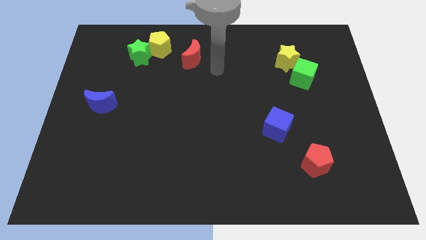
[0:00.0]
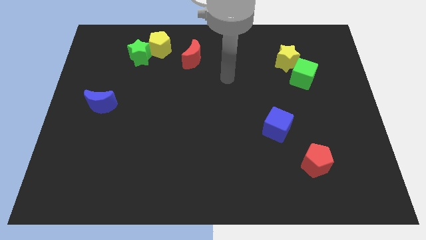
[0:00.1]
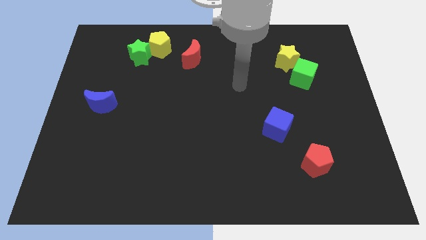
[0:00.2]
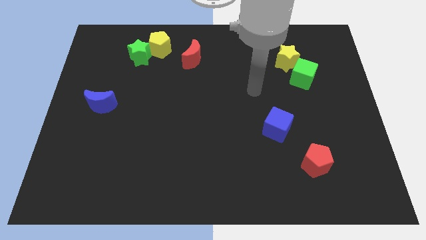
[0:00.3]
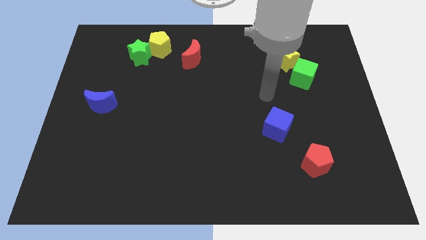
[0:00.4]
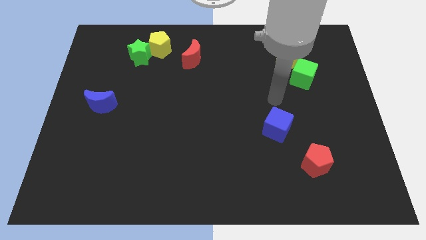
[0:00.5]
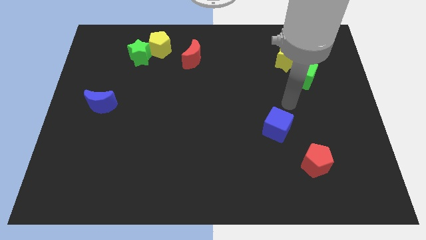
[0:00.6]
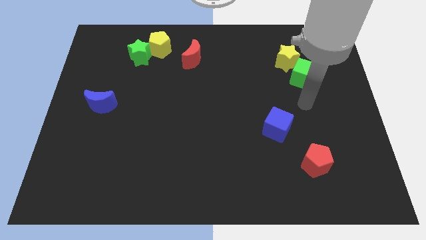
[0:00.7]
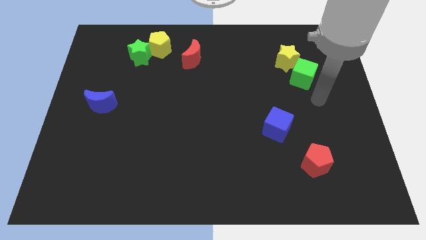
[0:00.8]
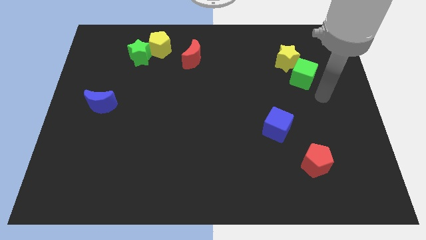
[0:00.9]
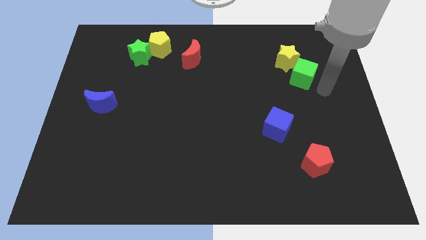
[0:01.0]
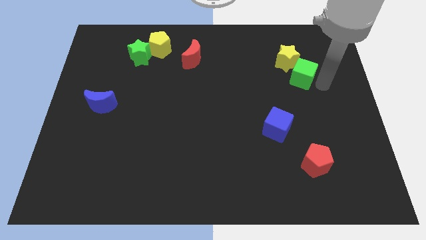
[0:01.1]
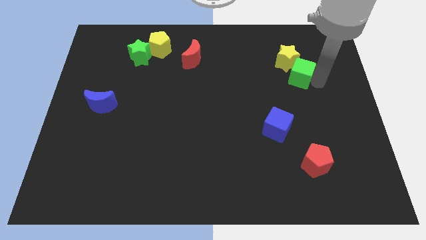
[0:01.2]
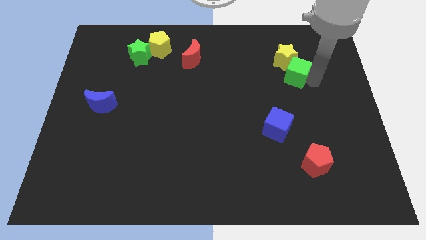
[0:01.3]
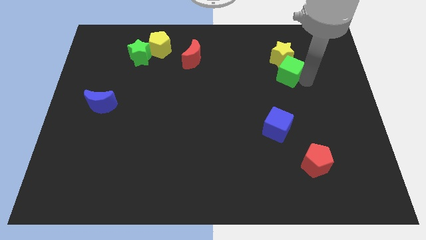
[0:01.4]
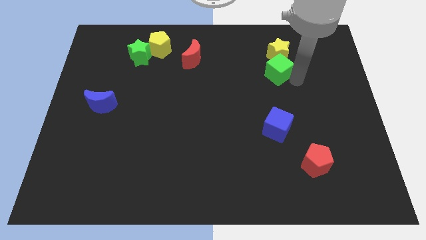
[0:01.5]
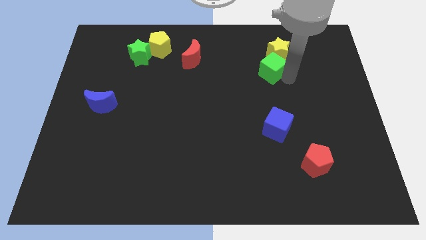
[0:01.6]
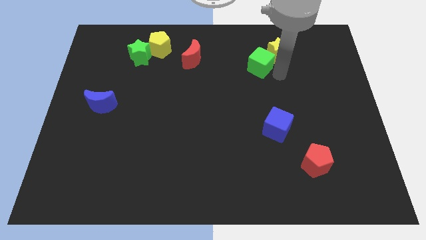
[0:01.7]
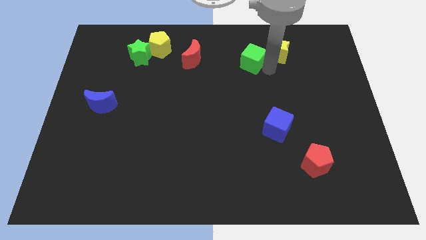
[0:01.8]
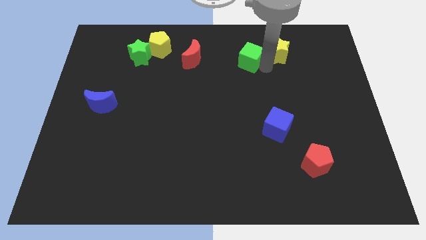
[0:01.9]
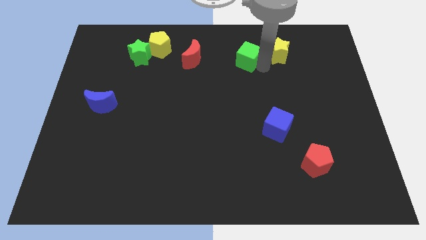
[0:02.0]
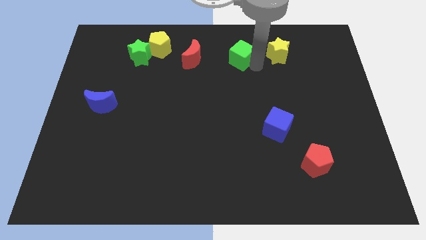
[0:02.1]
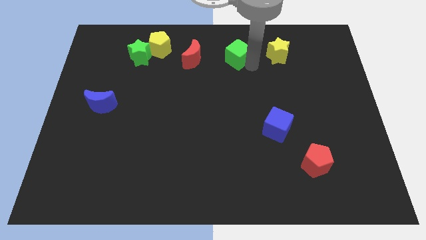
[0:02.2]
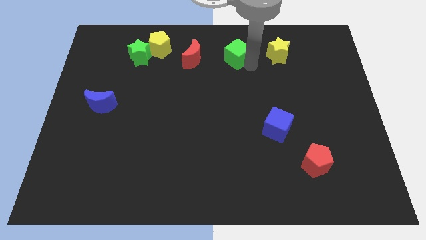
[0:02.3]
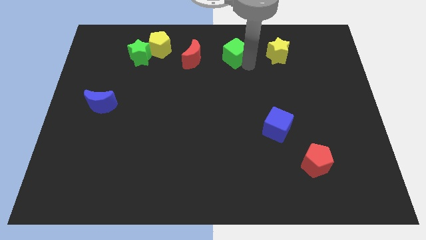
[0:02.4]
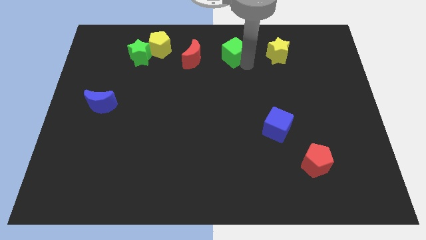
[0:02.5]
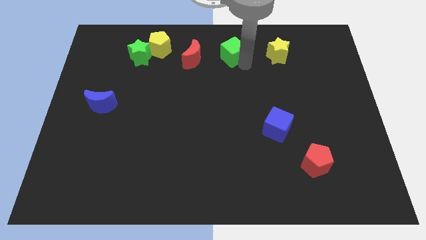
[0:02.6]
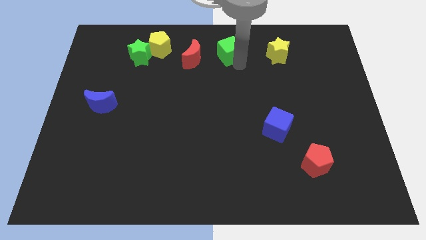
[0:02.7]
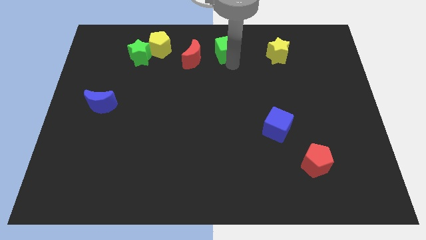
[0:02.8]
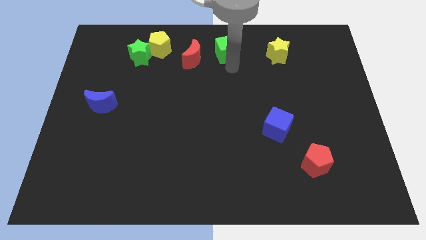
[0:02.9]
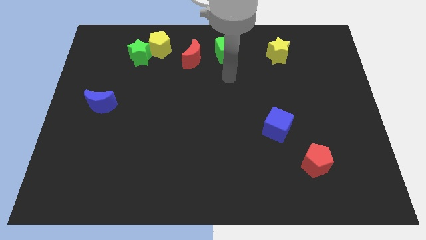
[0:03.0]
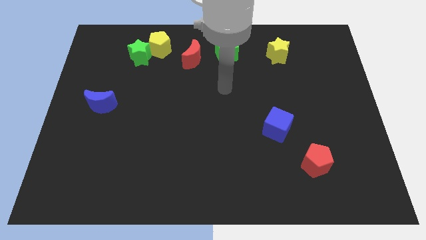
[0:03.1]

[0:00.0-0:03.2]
separate the green cube from the yellow star

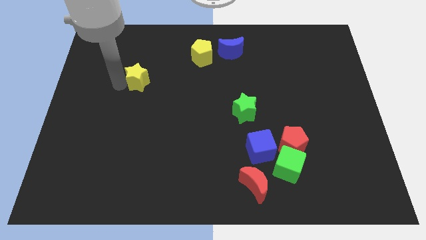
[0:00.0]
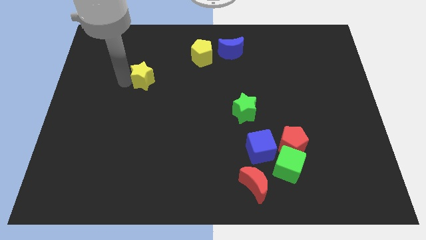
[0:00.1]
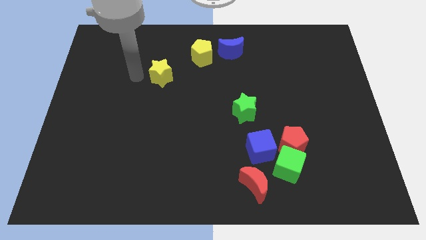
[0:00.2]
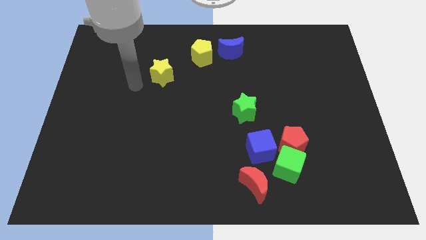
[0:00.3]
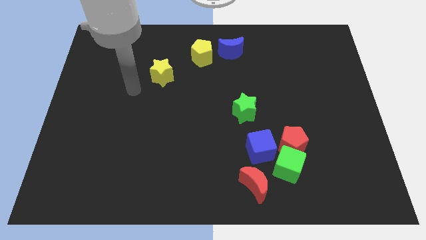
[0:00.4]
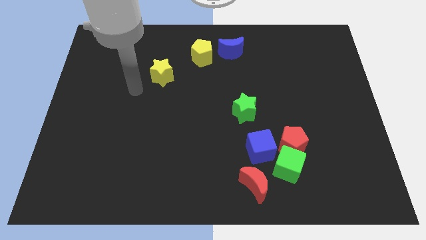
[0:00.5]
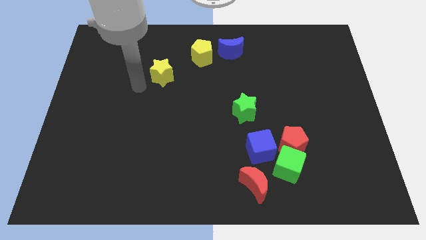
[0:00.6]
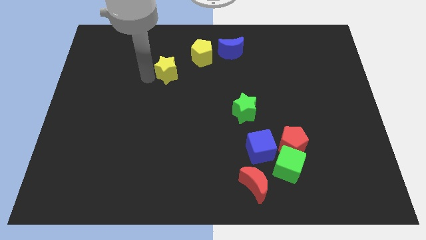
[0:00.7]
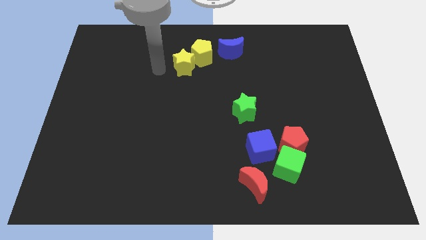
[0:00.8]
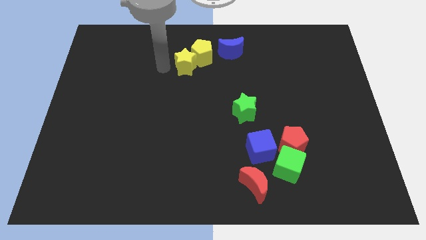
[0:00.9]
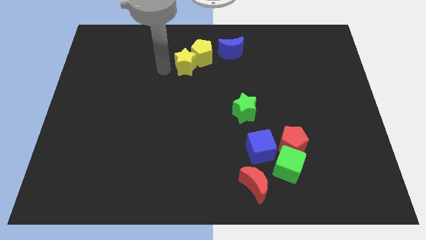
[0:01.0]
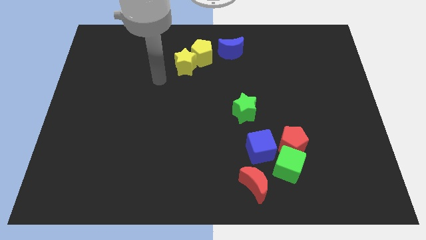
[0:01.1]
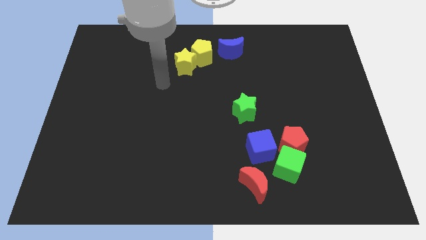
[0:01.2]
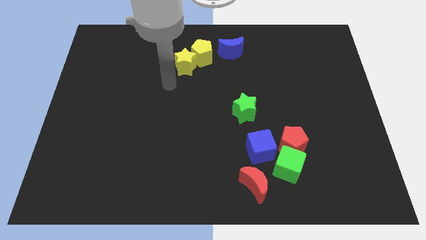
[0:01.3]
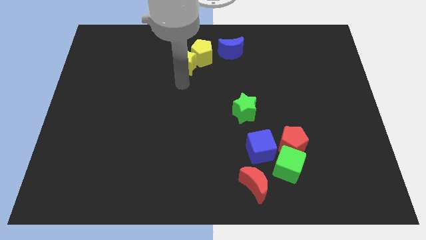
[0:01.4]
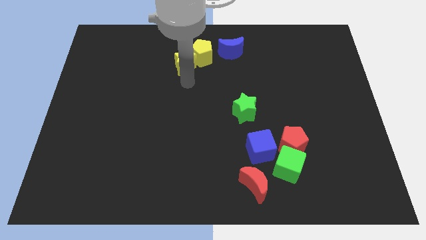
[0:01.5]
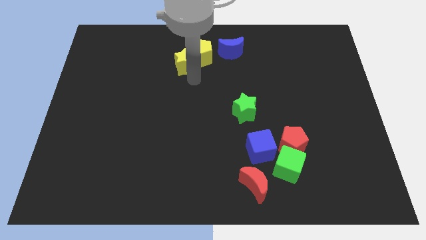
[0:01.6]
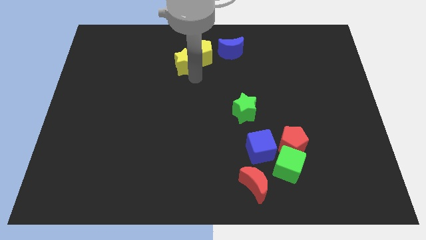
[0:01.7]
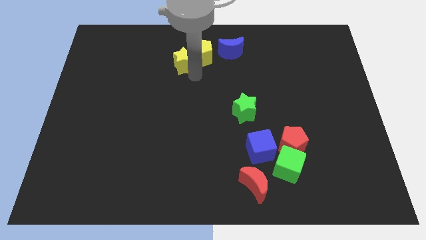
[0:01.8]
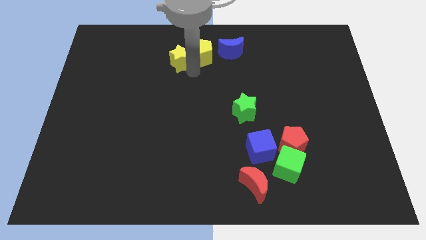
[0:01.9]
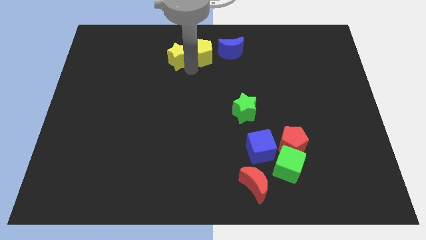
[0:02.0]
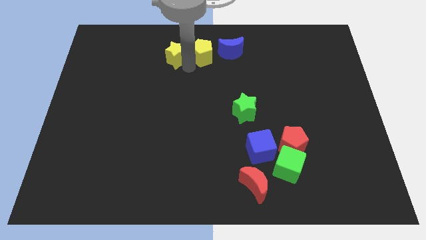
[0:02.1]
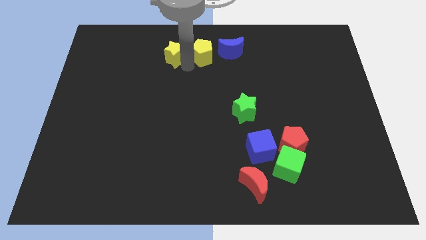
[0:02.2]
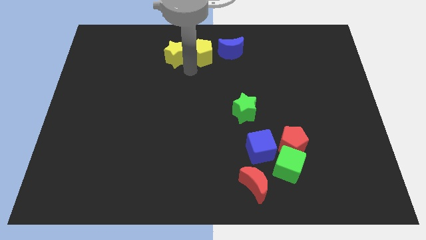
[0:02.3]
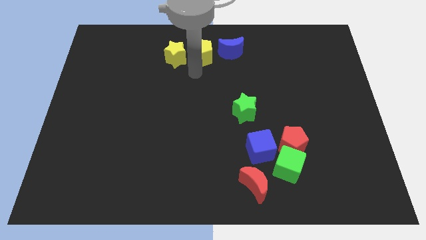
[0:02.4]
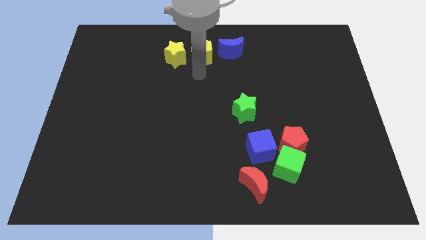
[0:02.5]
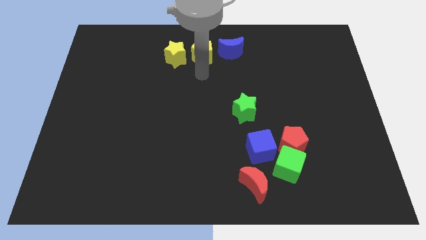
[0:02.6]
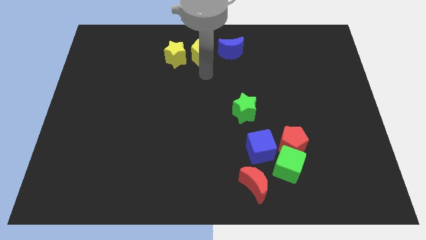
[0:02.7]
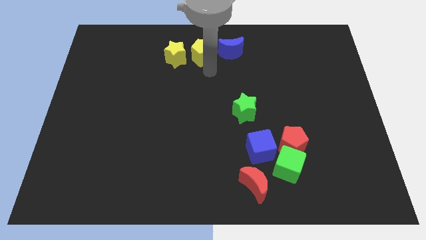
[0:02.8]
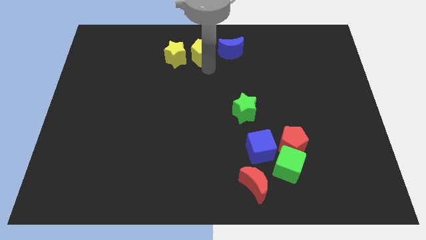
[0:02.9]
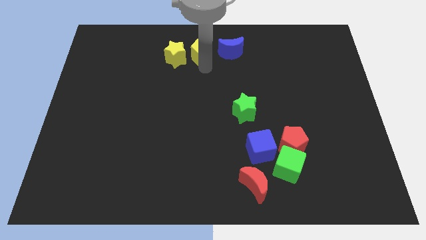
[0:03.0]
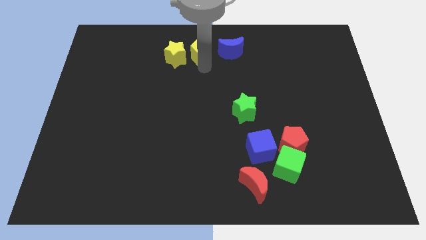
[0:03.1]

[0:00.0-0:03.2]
adjust yellow star to the left of yellow pentagon

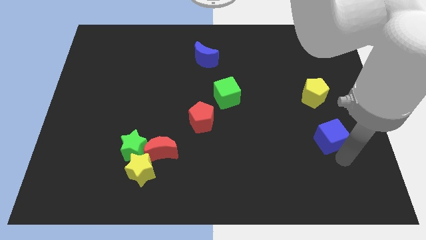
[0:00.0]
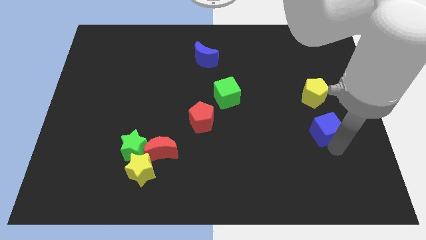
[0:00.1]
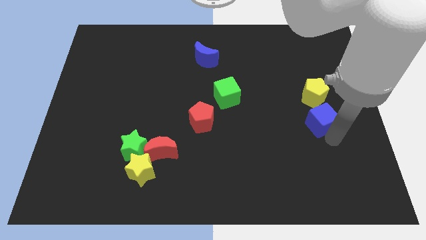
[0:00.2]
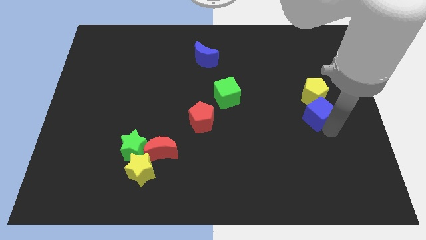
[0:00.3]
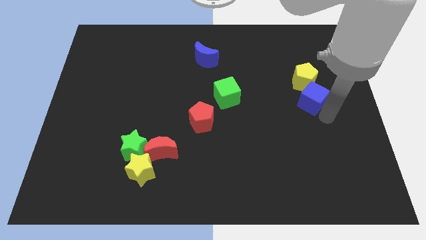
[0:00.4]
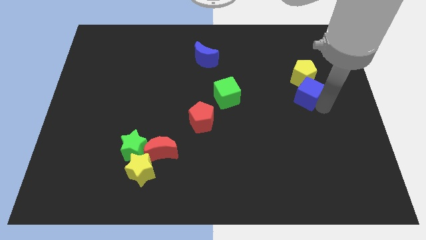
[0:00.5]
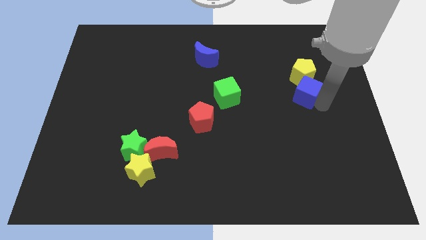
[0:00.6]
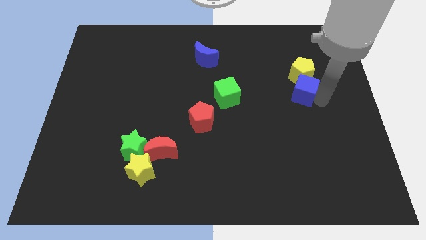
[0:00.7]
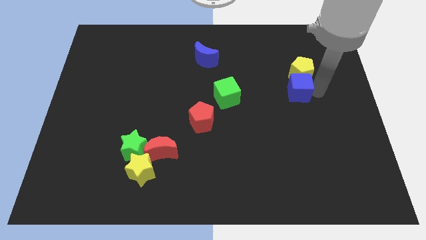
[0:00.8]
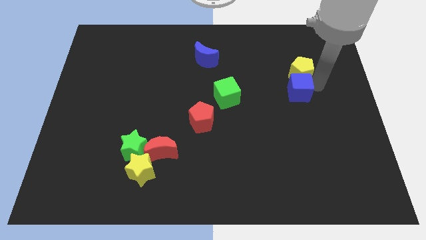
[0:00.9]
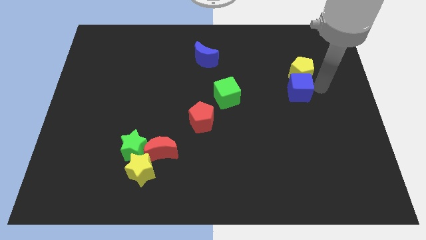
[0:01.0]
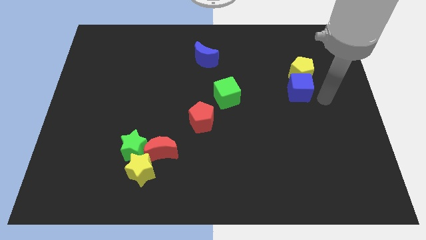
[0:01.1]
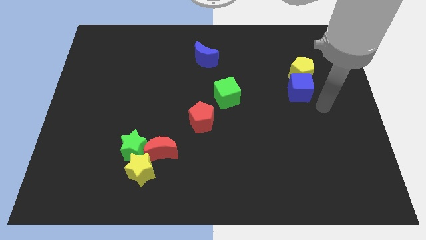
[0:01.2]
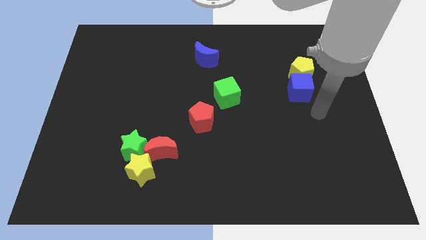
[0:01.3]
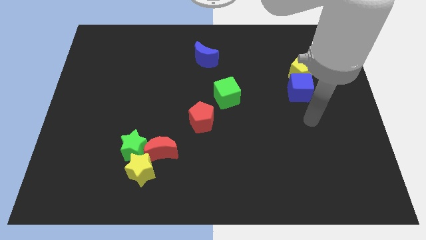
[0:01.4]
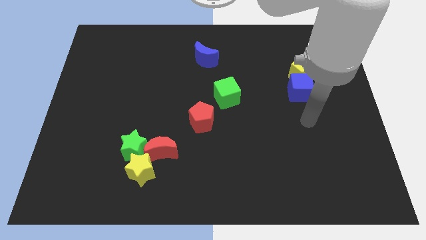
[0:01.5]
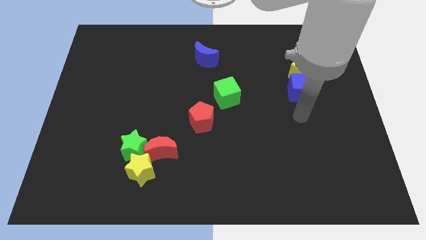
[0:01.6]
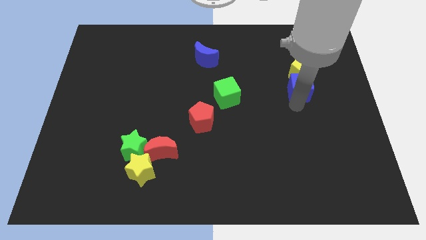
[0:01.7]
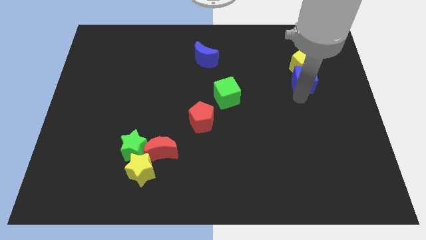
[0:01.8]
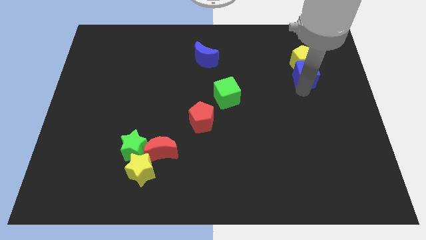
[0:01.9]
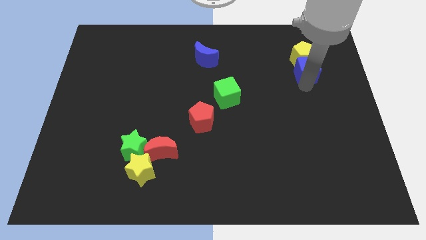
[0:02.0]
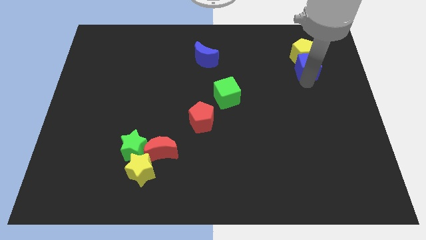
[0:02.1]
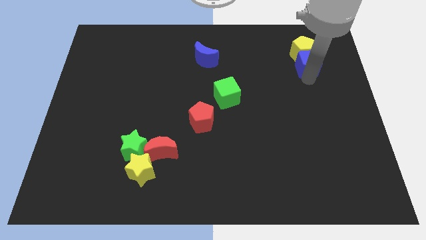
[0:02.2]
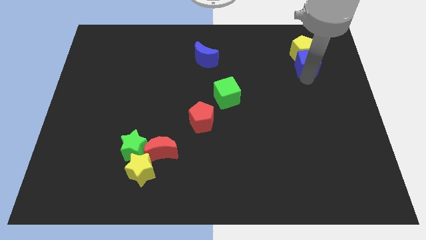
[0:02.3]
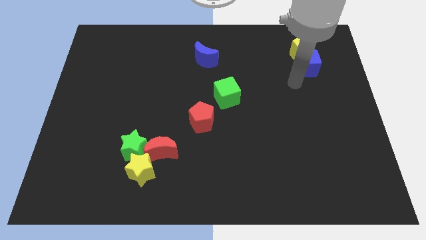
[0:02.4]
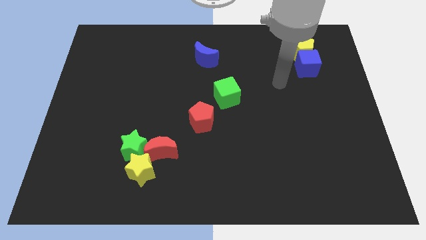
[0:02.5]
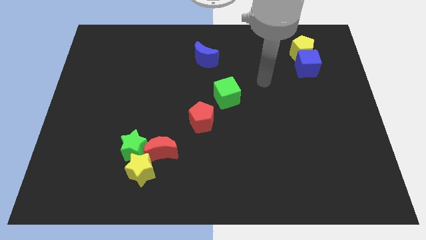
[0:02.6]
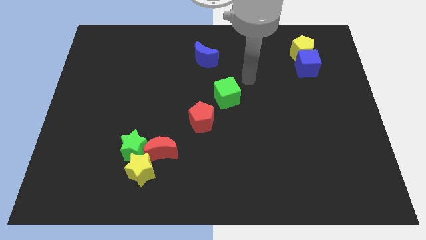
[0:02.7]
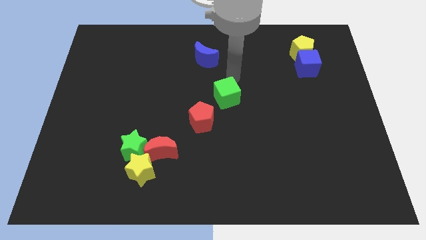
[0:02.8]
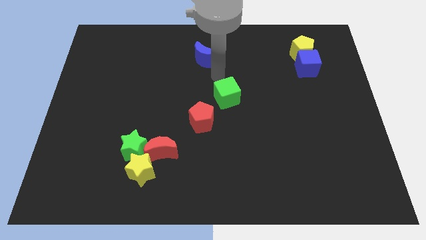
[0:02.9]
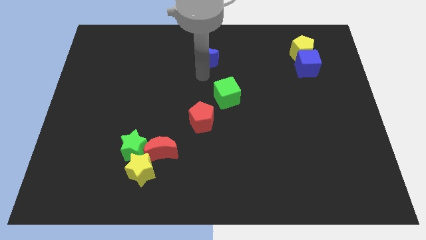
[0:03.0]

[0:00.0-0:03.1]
push the blue cube along the yellow pentagon towards the top of the board
